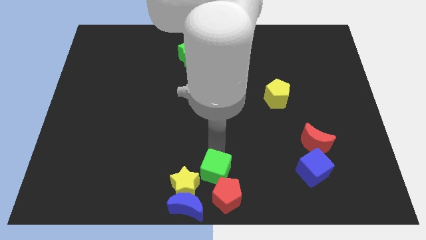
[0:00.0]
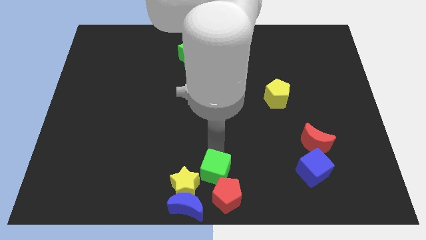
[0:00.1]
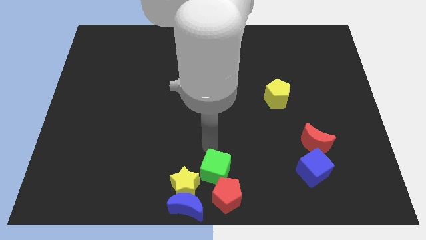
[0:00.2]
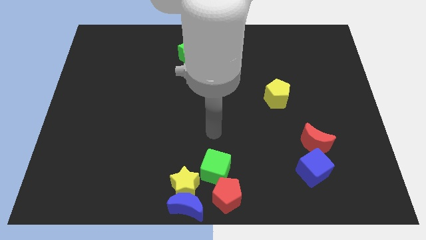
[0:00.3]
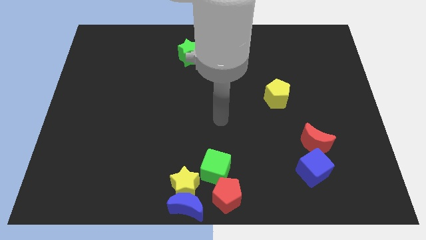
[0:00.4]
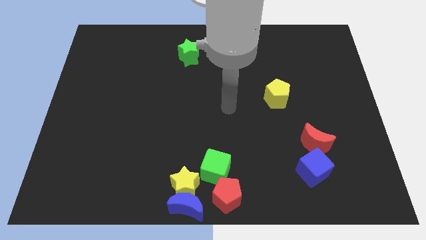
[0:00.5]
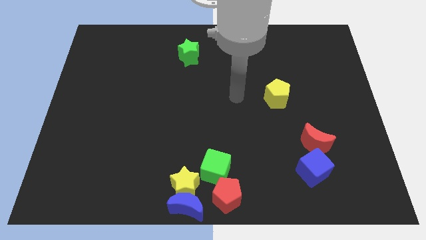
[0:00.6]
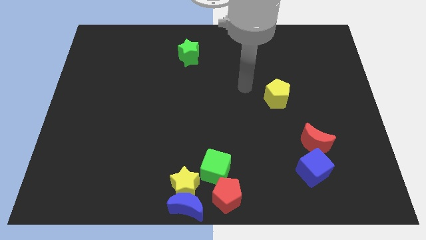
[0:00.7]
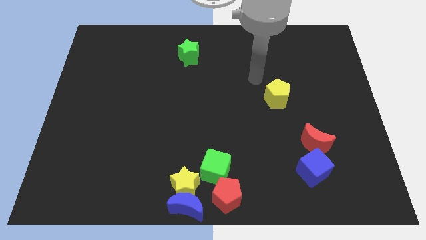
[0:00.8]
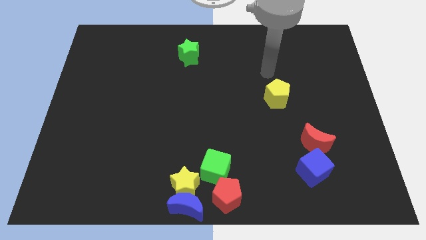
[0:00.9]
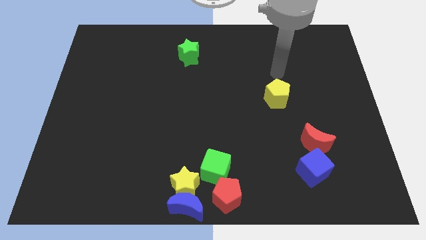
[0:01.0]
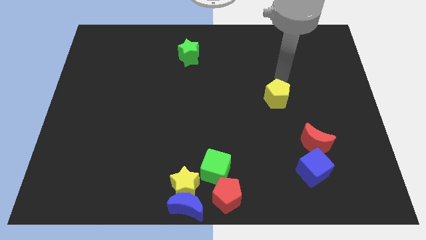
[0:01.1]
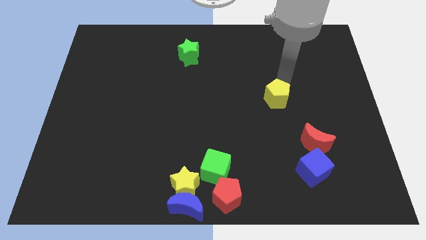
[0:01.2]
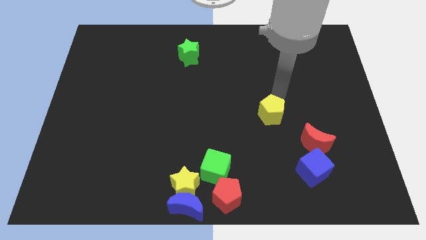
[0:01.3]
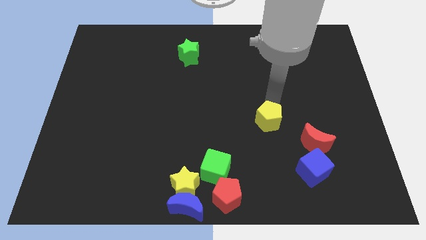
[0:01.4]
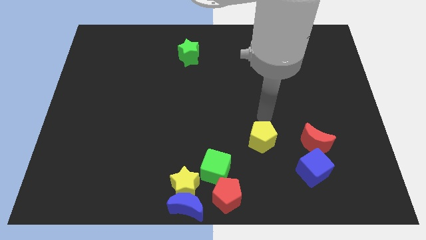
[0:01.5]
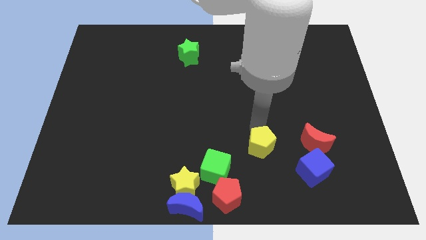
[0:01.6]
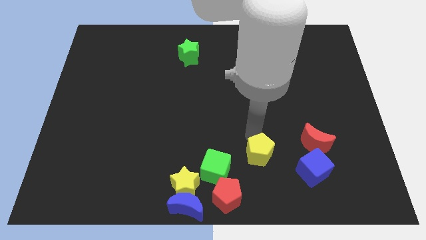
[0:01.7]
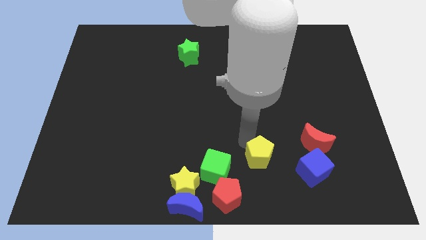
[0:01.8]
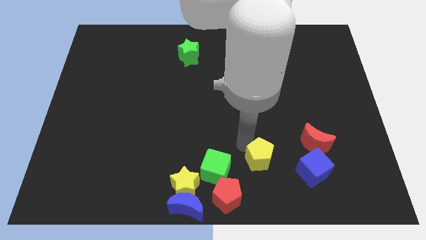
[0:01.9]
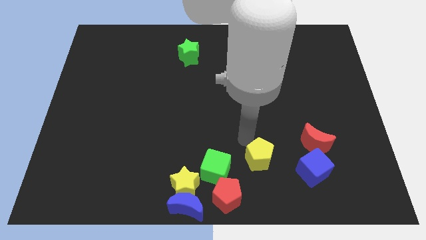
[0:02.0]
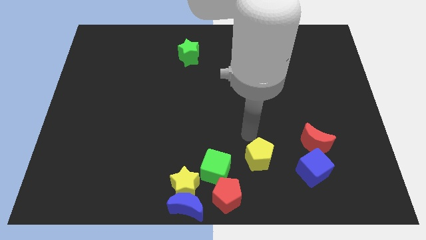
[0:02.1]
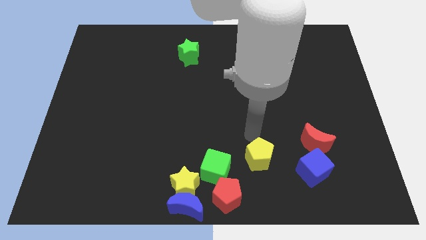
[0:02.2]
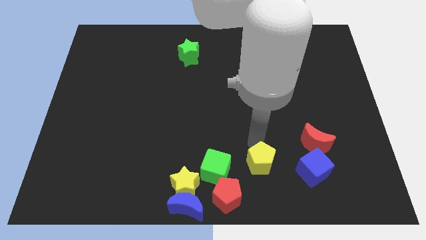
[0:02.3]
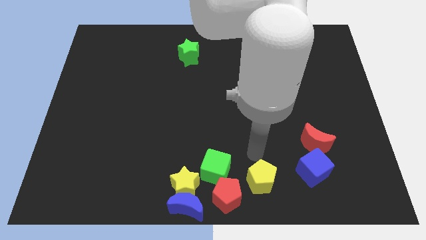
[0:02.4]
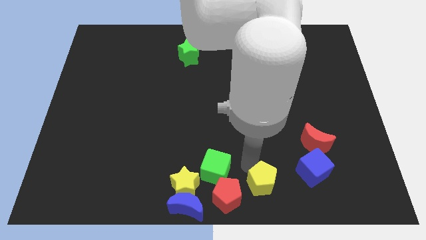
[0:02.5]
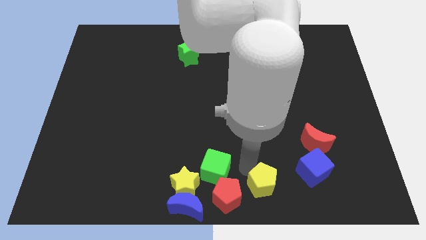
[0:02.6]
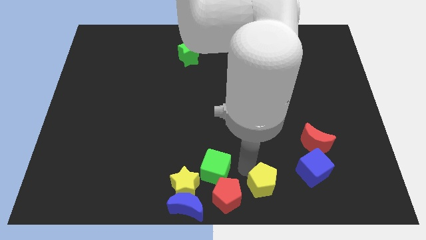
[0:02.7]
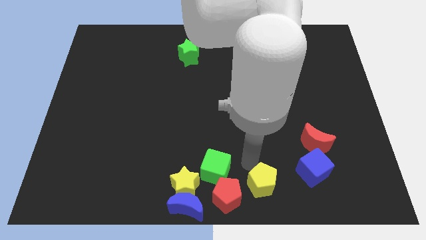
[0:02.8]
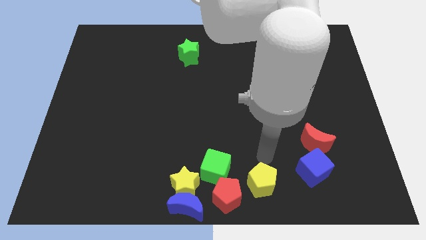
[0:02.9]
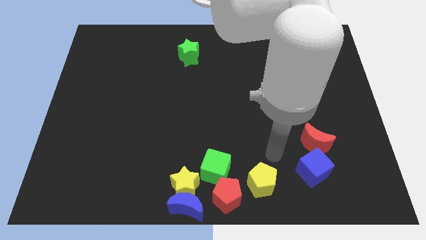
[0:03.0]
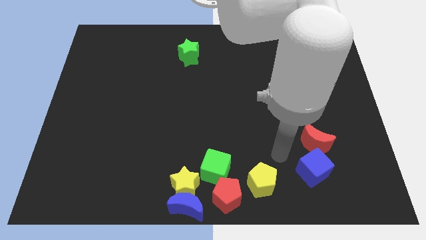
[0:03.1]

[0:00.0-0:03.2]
place the yellow pentagon in between the red pentagon and the blue cube

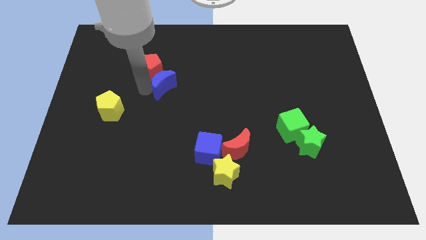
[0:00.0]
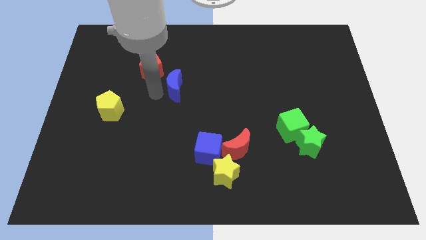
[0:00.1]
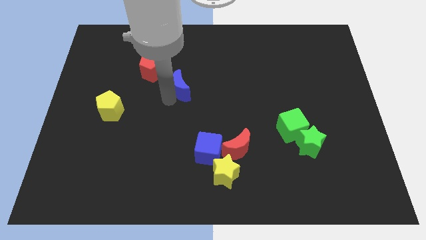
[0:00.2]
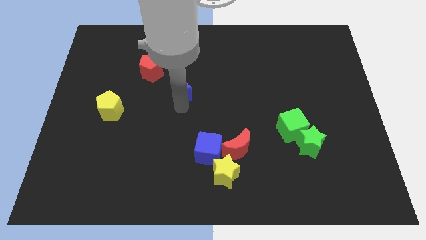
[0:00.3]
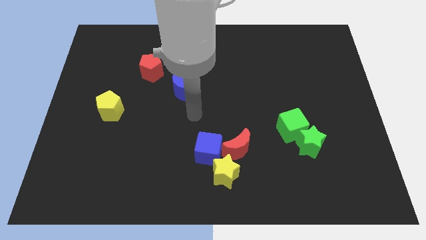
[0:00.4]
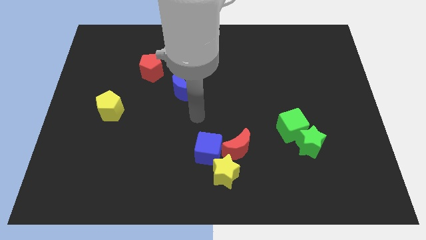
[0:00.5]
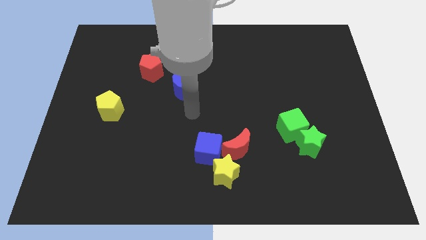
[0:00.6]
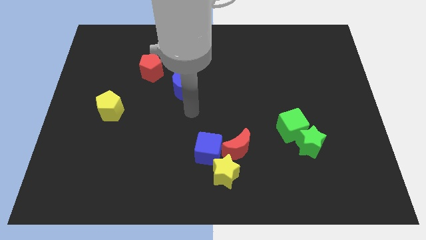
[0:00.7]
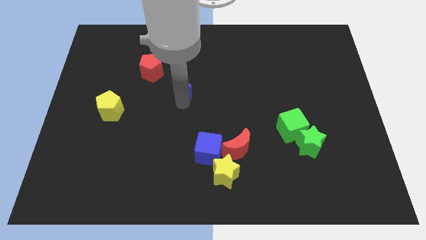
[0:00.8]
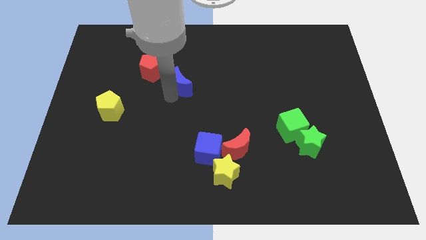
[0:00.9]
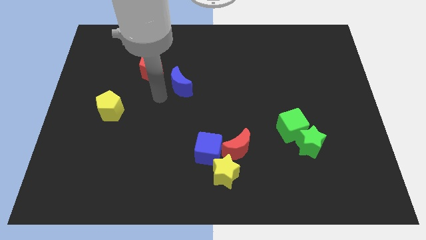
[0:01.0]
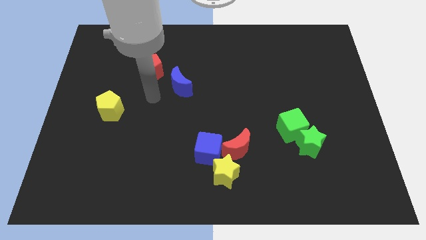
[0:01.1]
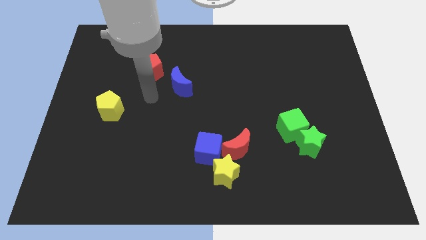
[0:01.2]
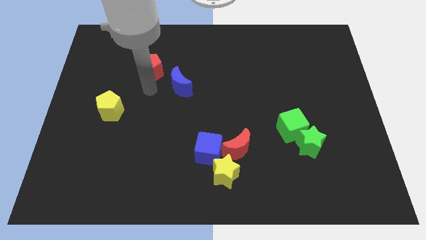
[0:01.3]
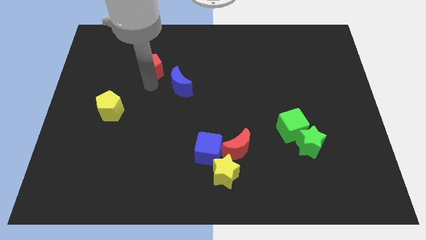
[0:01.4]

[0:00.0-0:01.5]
separate blue crescent from the red pentagon

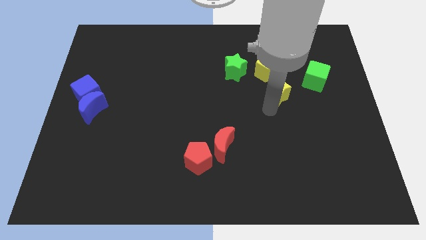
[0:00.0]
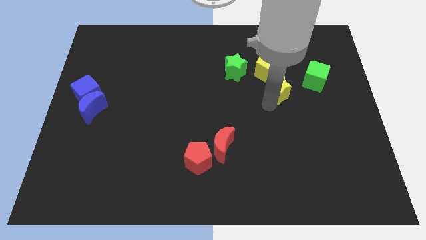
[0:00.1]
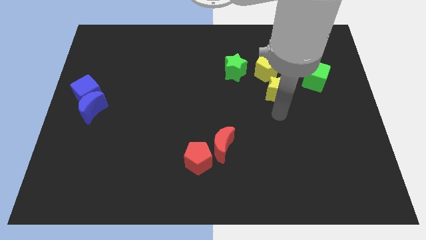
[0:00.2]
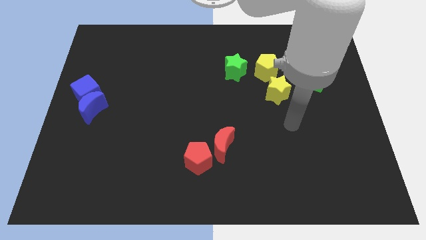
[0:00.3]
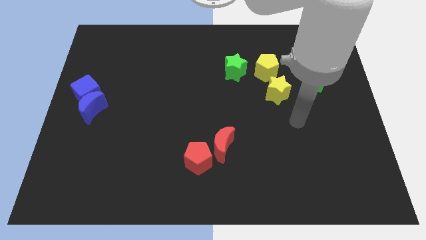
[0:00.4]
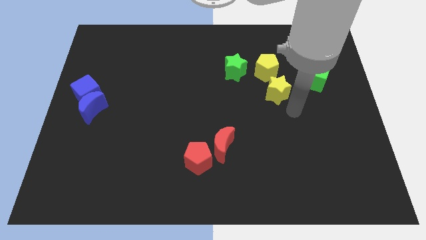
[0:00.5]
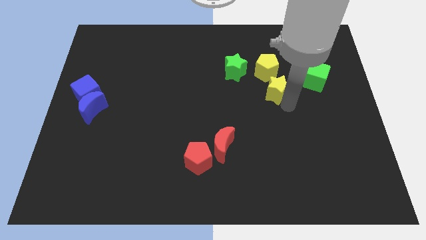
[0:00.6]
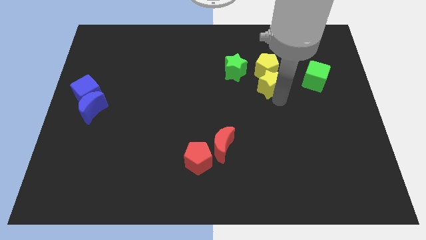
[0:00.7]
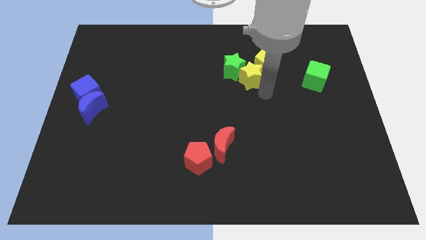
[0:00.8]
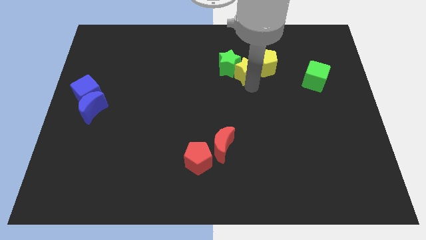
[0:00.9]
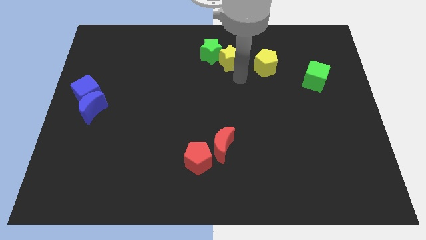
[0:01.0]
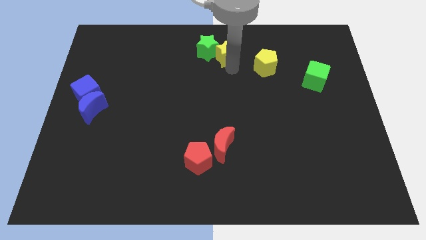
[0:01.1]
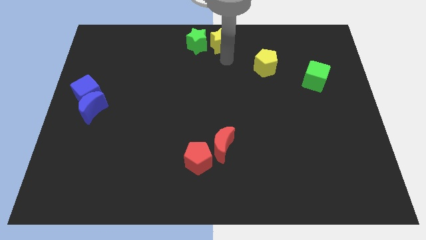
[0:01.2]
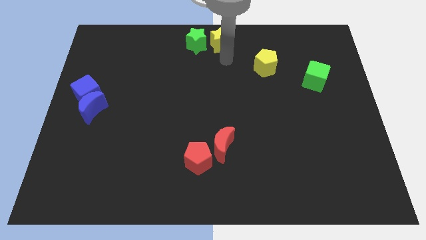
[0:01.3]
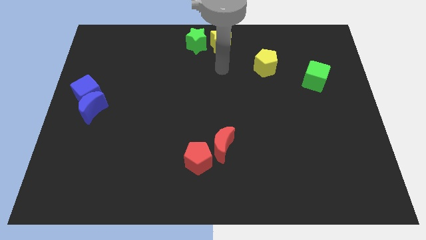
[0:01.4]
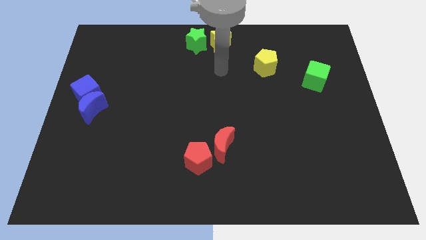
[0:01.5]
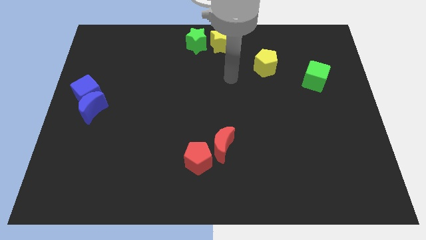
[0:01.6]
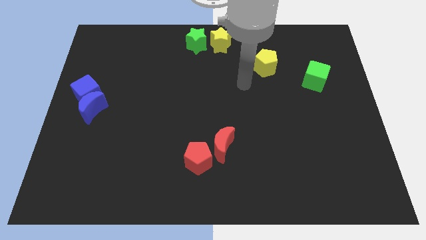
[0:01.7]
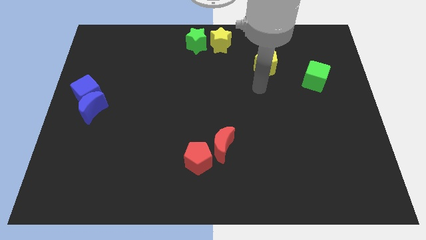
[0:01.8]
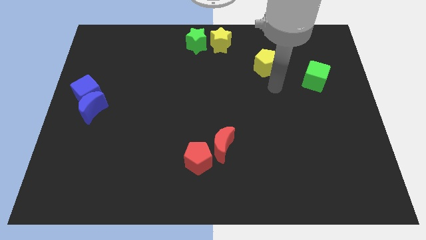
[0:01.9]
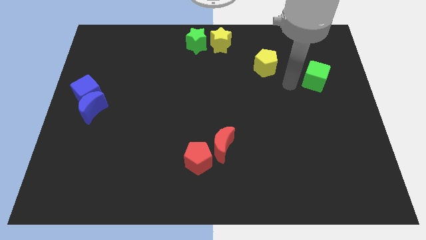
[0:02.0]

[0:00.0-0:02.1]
push green and yellow stars to the top center of the board

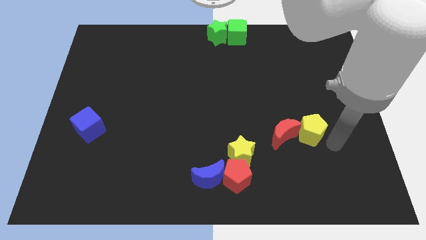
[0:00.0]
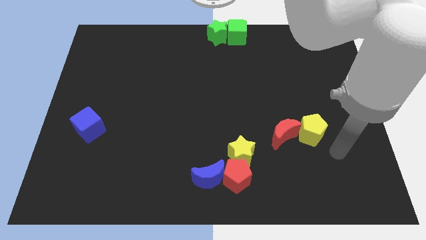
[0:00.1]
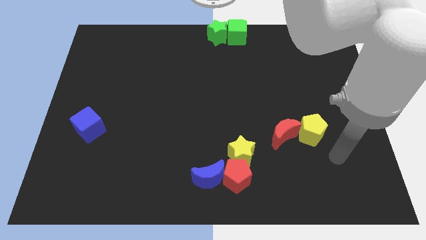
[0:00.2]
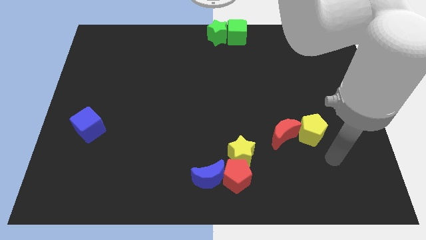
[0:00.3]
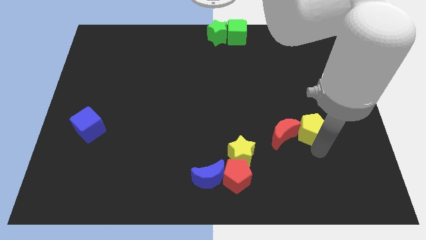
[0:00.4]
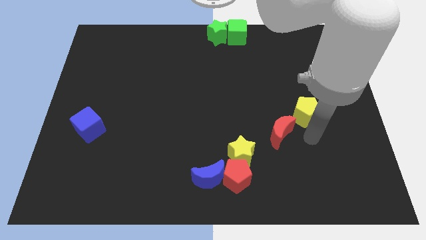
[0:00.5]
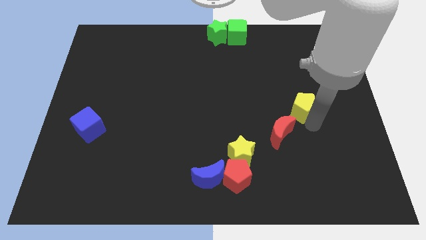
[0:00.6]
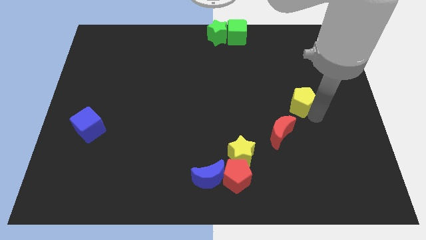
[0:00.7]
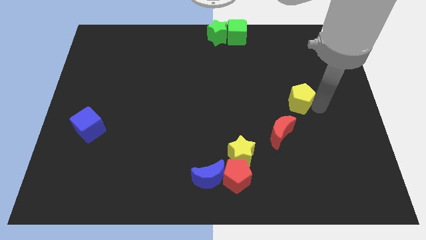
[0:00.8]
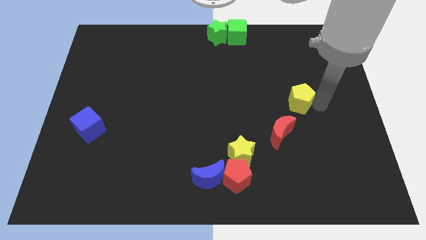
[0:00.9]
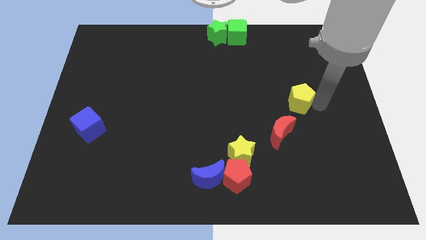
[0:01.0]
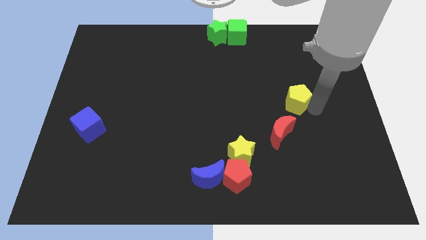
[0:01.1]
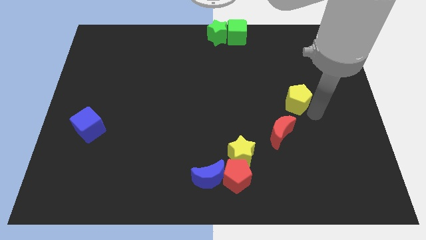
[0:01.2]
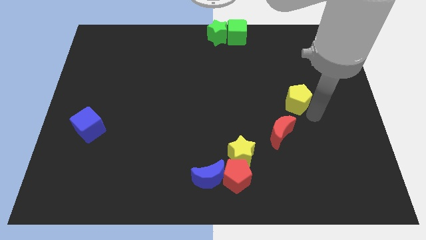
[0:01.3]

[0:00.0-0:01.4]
push the yellow pentagon diagnol to the red crescent

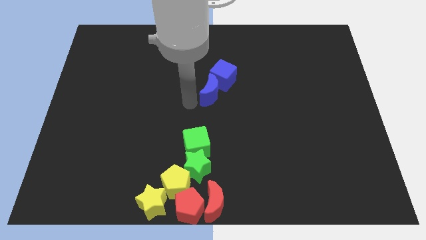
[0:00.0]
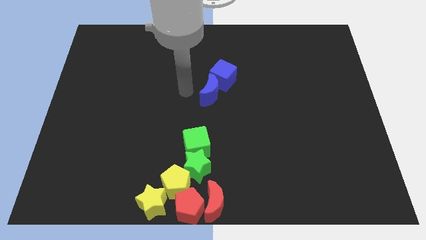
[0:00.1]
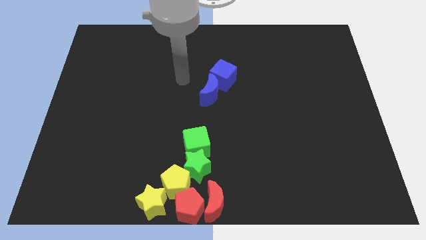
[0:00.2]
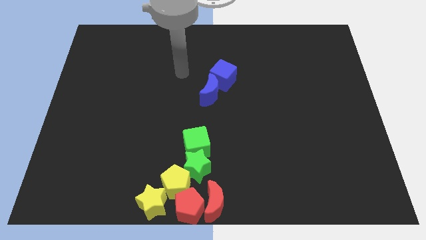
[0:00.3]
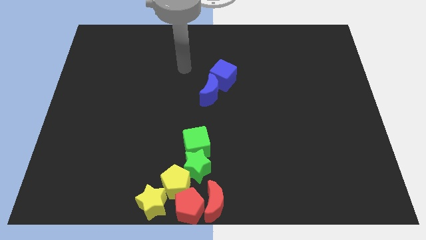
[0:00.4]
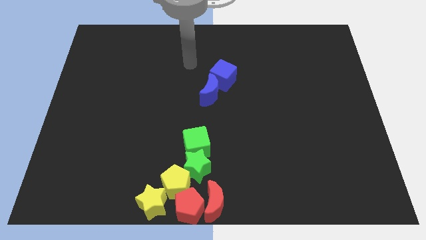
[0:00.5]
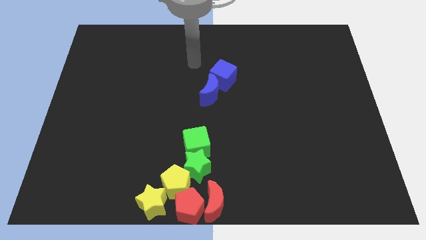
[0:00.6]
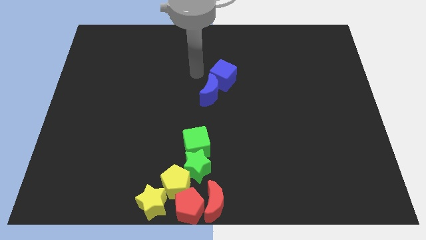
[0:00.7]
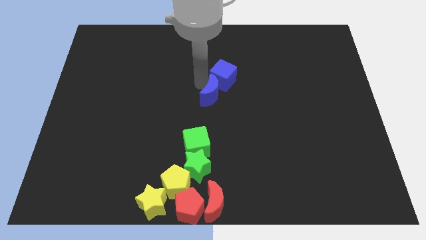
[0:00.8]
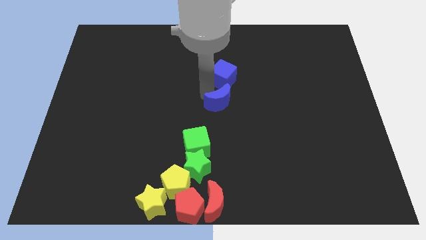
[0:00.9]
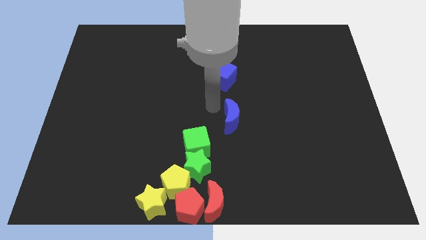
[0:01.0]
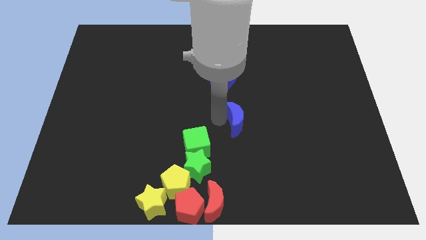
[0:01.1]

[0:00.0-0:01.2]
separate the blue crescent from the blue cube
